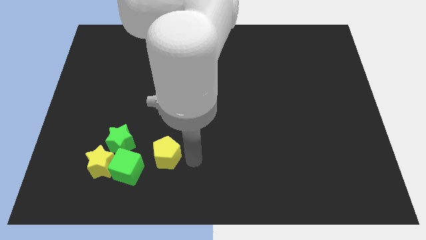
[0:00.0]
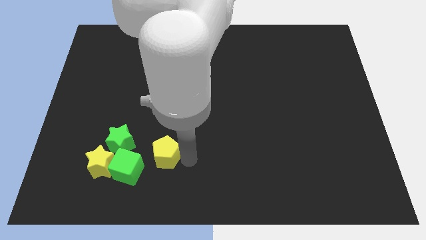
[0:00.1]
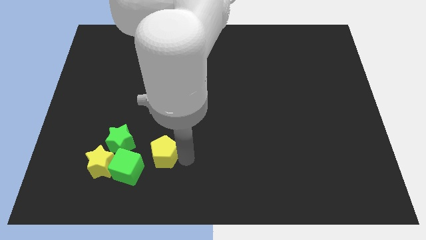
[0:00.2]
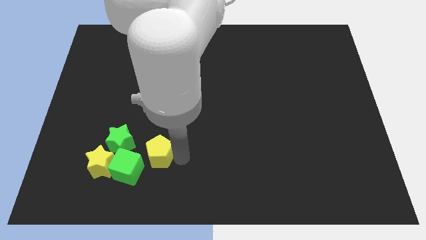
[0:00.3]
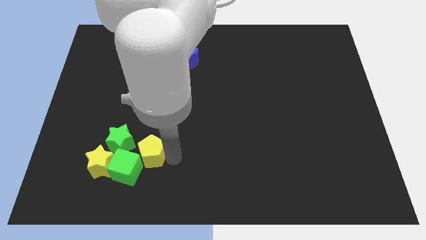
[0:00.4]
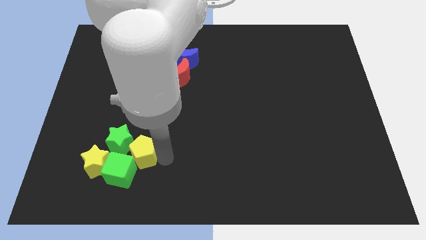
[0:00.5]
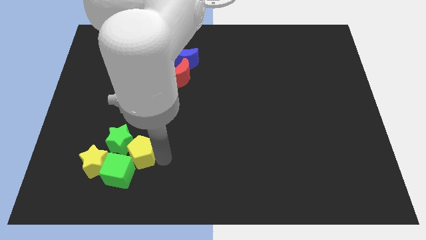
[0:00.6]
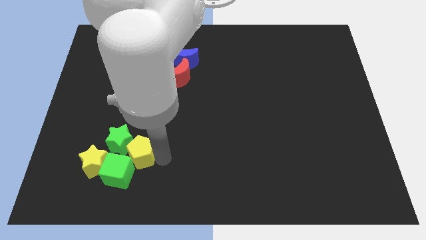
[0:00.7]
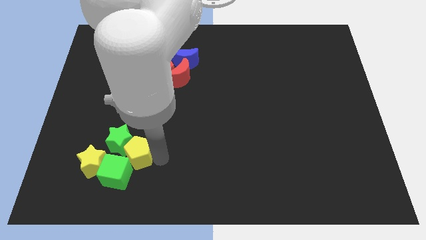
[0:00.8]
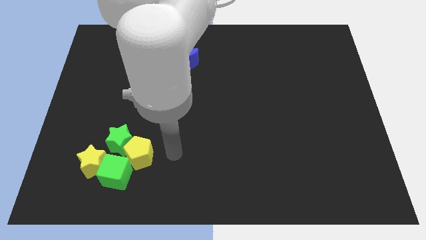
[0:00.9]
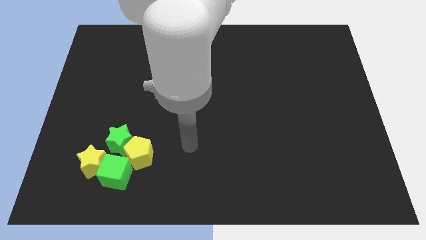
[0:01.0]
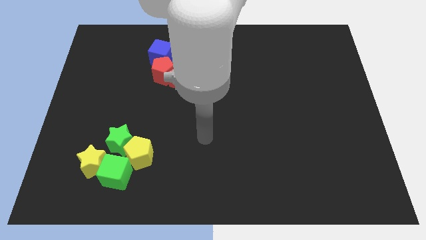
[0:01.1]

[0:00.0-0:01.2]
move the yellow pentagon into the green star and green cube

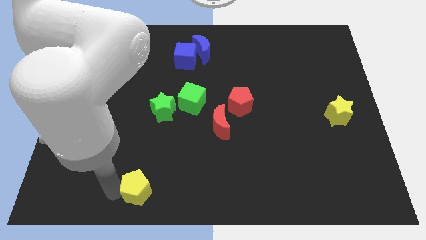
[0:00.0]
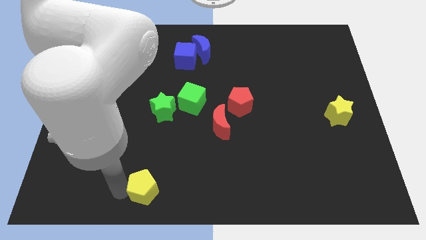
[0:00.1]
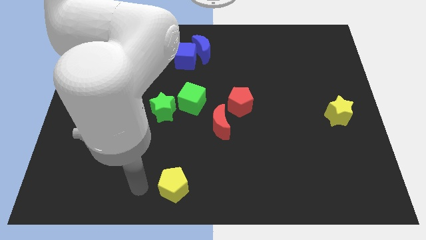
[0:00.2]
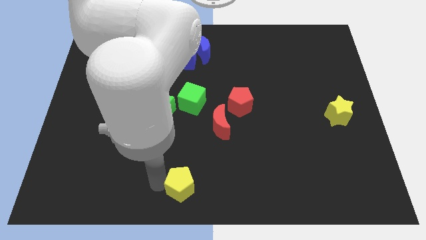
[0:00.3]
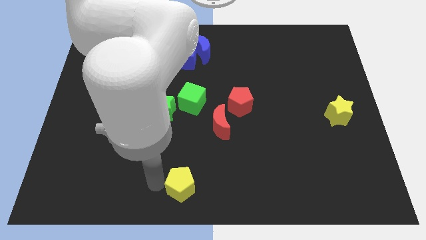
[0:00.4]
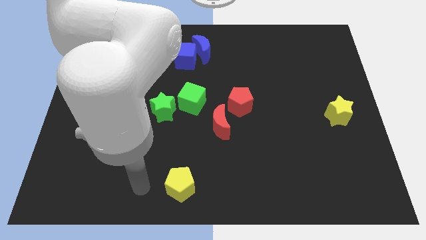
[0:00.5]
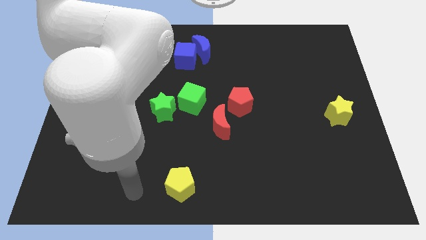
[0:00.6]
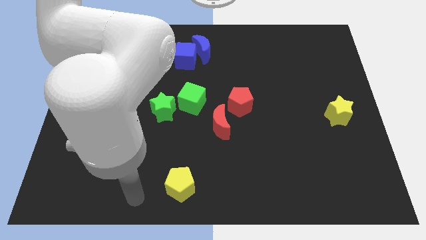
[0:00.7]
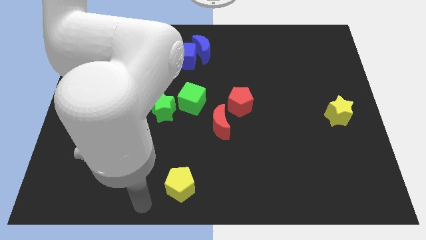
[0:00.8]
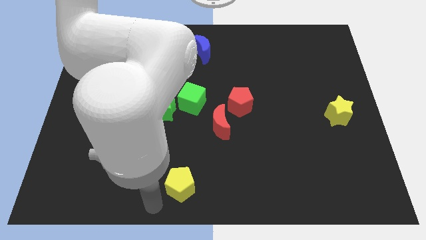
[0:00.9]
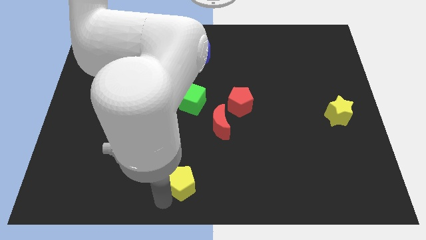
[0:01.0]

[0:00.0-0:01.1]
put yellow pentagon vertically below green star

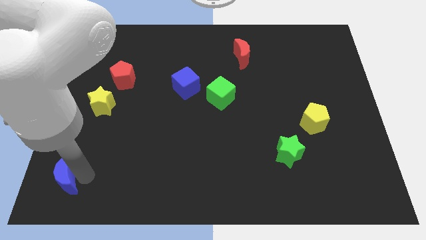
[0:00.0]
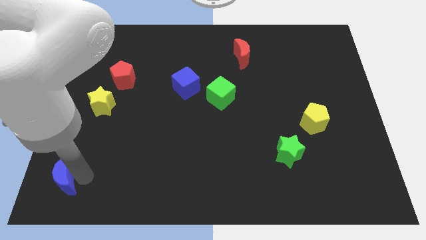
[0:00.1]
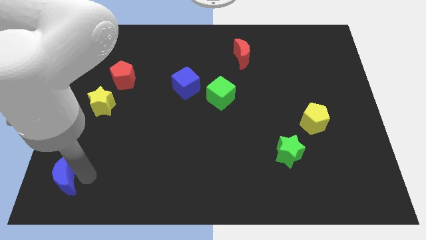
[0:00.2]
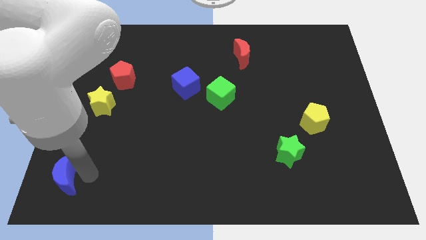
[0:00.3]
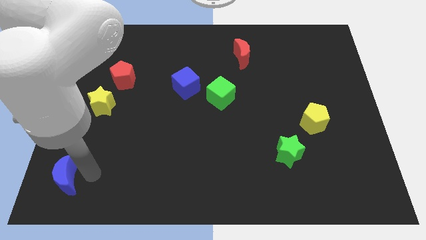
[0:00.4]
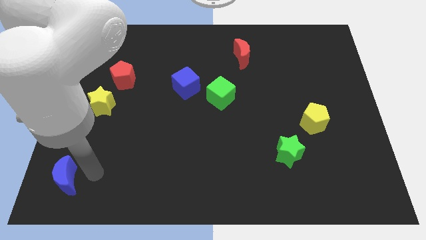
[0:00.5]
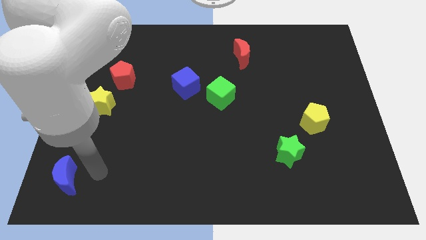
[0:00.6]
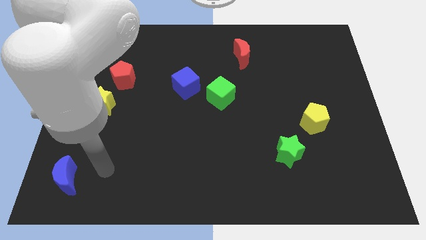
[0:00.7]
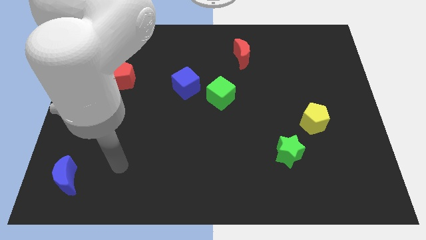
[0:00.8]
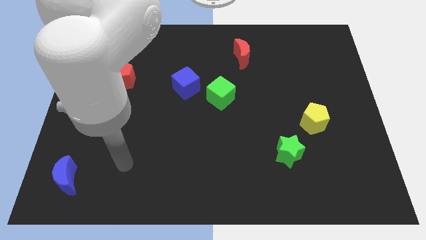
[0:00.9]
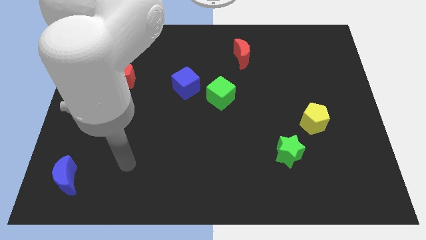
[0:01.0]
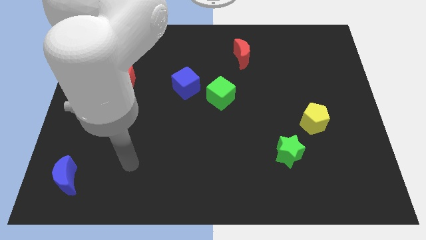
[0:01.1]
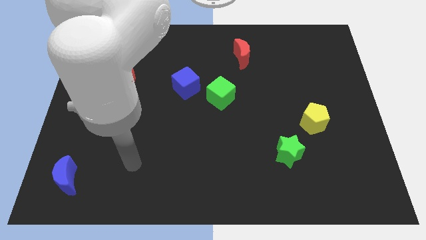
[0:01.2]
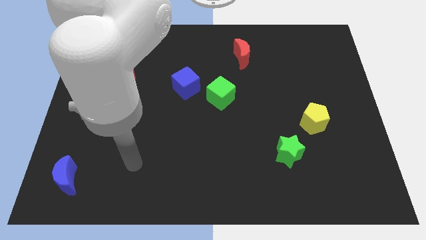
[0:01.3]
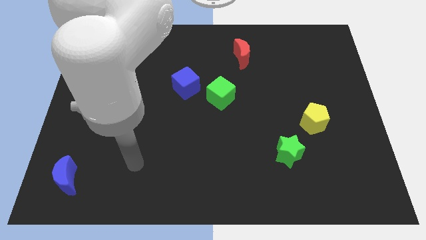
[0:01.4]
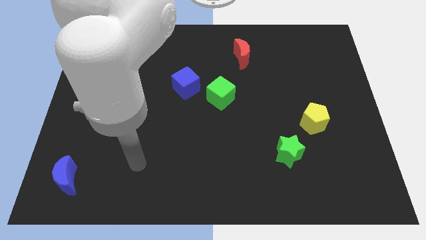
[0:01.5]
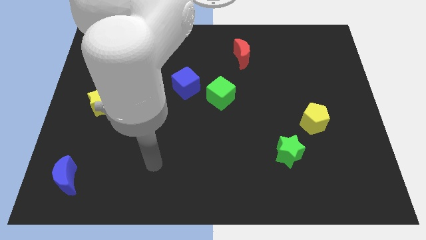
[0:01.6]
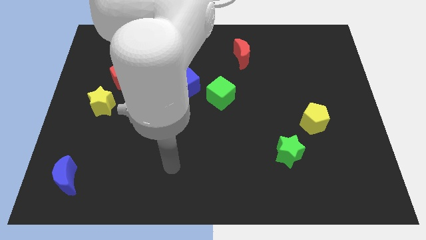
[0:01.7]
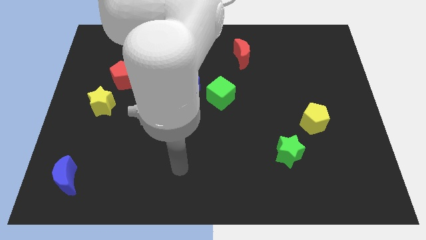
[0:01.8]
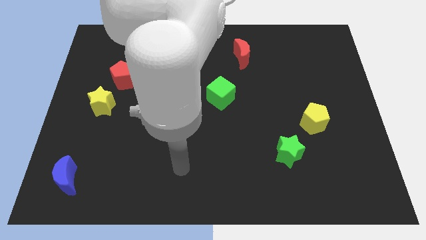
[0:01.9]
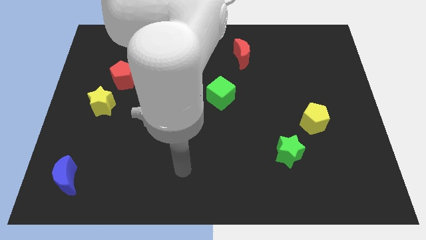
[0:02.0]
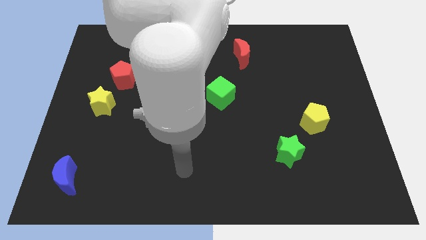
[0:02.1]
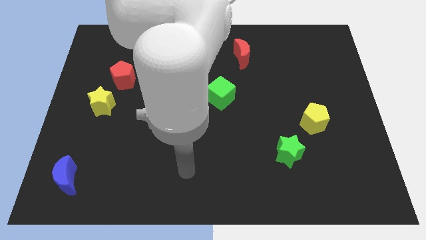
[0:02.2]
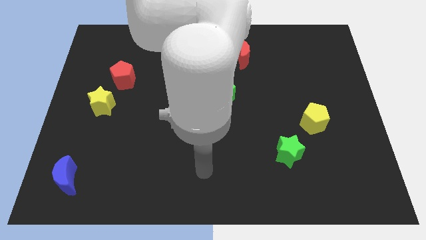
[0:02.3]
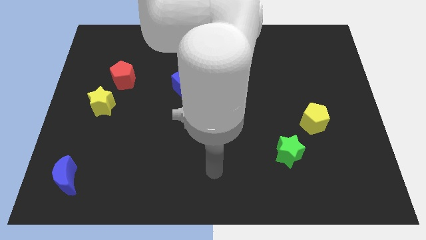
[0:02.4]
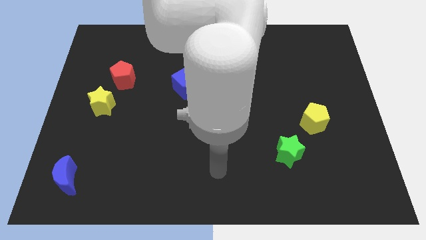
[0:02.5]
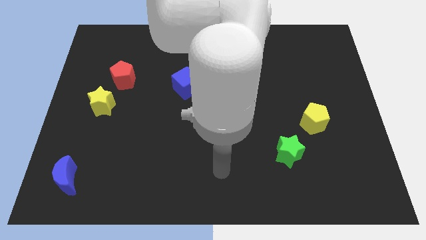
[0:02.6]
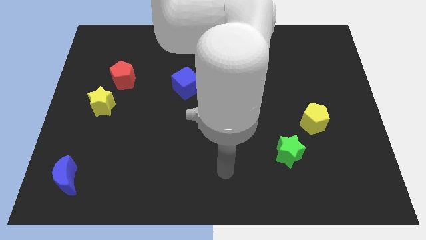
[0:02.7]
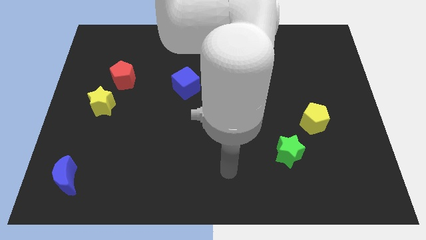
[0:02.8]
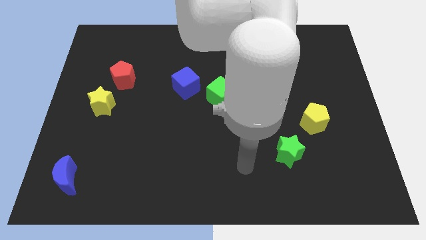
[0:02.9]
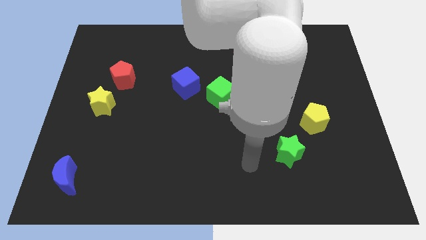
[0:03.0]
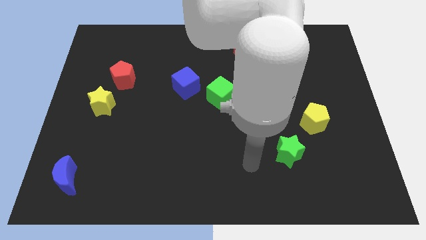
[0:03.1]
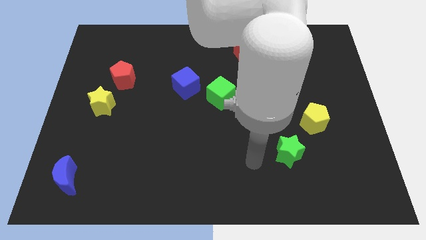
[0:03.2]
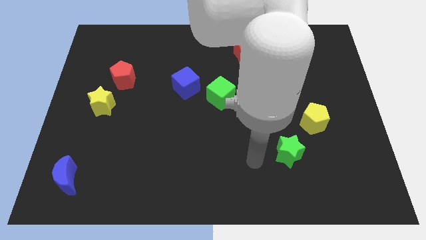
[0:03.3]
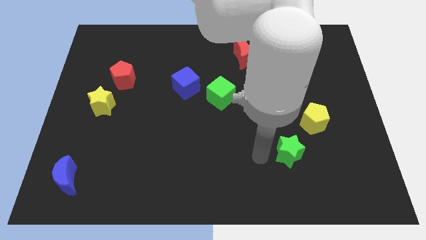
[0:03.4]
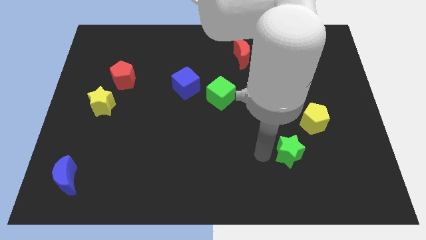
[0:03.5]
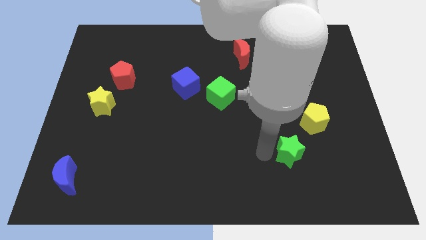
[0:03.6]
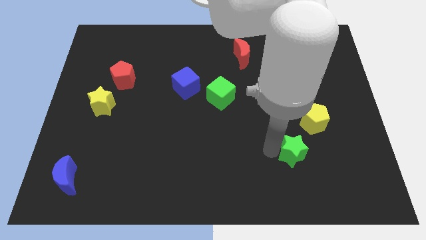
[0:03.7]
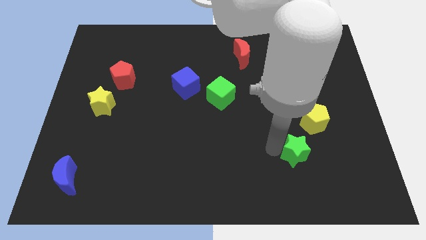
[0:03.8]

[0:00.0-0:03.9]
touch the left of the green star

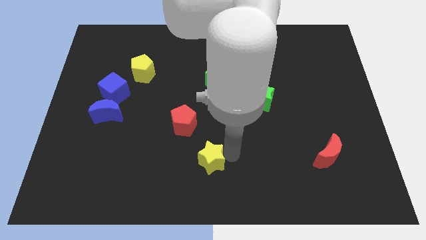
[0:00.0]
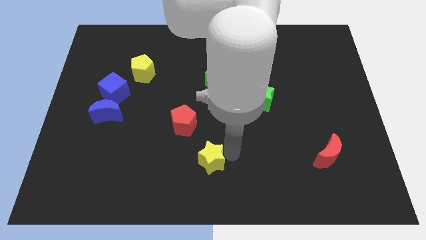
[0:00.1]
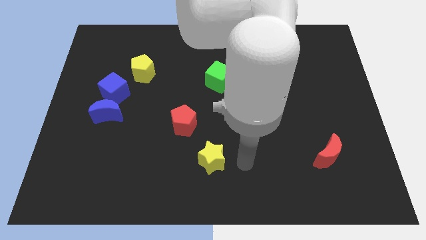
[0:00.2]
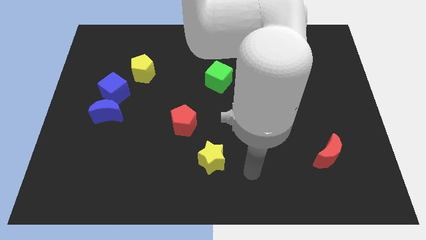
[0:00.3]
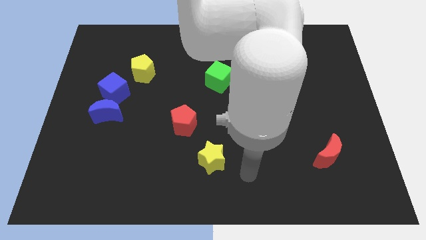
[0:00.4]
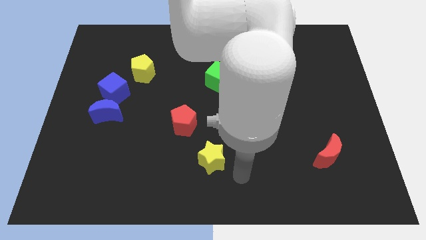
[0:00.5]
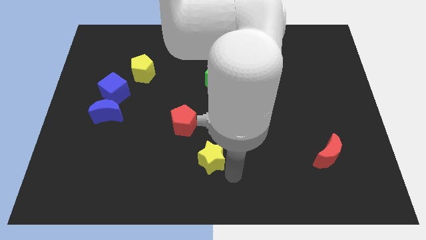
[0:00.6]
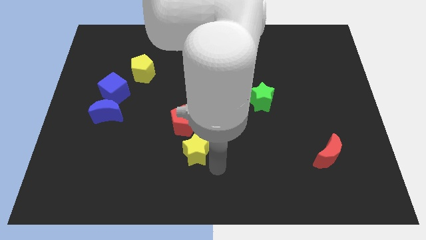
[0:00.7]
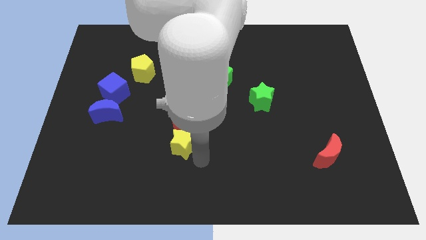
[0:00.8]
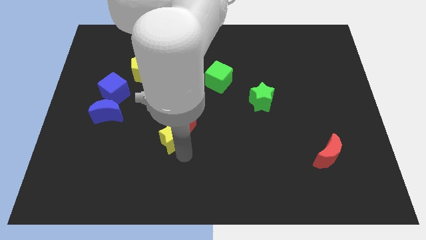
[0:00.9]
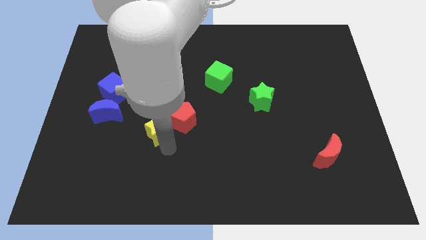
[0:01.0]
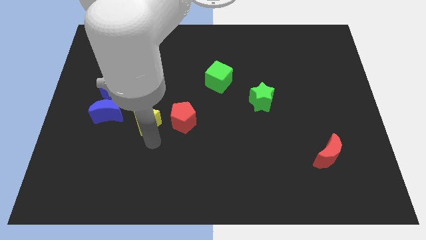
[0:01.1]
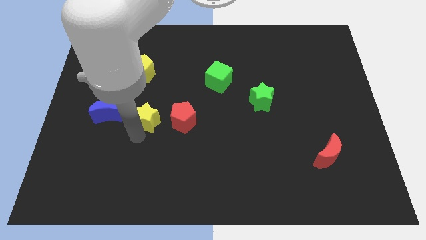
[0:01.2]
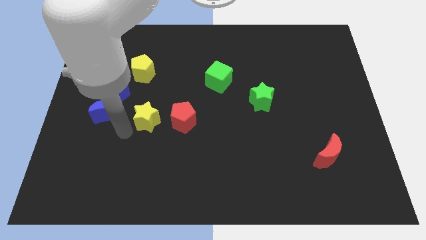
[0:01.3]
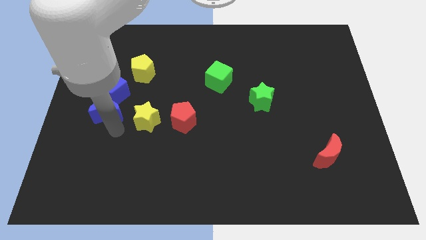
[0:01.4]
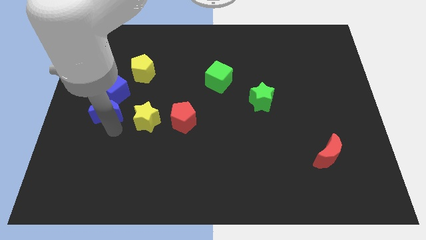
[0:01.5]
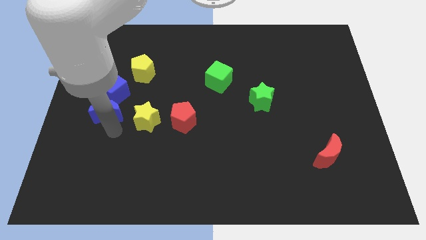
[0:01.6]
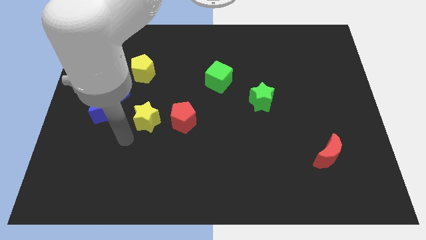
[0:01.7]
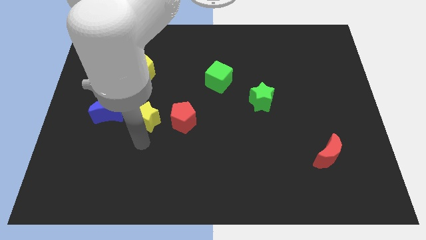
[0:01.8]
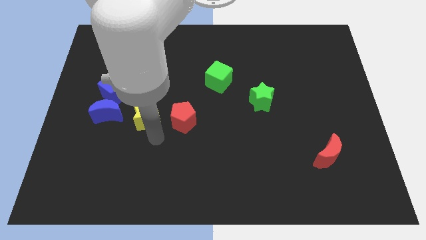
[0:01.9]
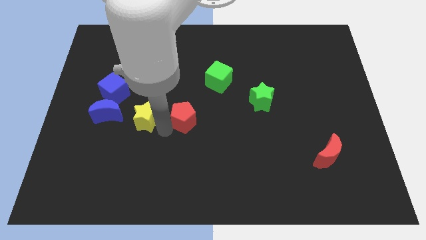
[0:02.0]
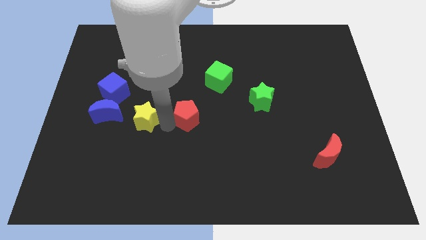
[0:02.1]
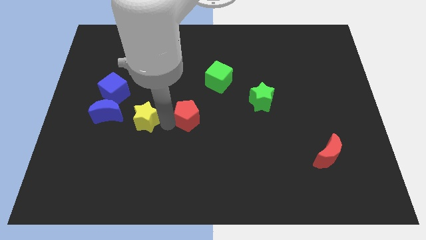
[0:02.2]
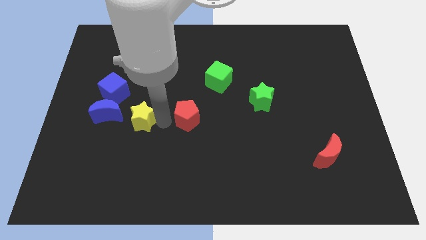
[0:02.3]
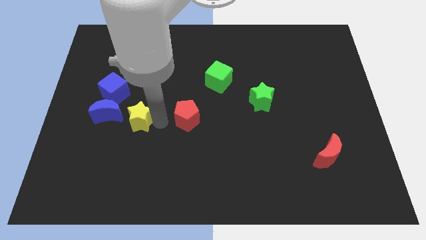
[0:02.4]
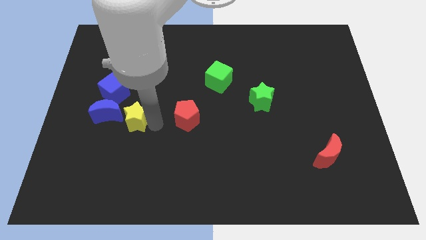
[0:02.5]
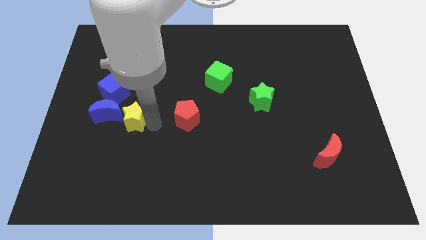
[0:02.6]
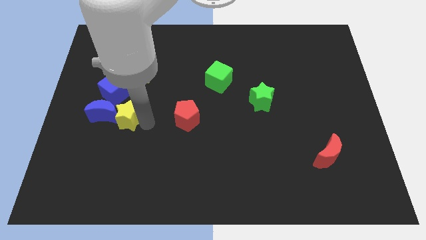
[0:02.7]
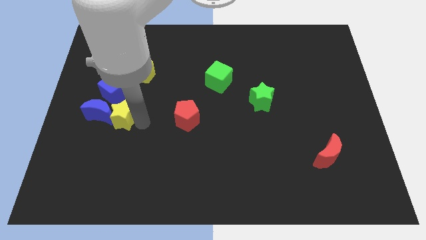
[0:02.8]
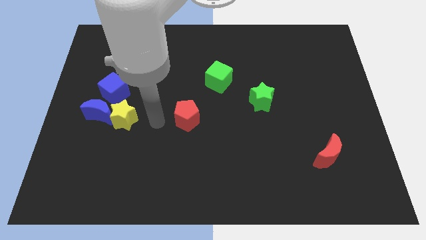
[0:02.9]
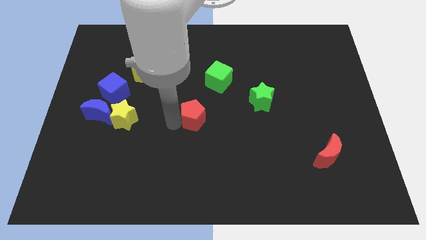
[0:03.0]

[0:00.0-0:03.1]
place yellow star to the bottom right of blue cube
